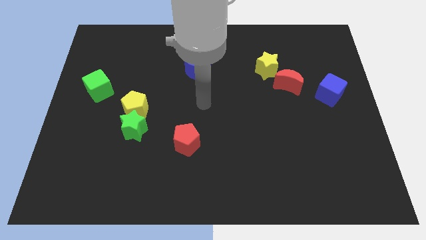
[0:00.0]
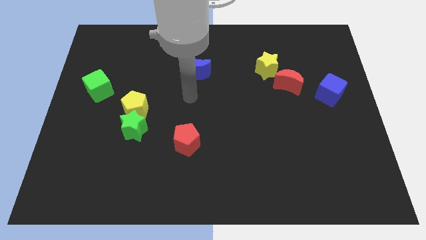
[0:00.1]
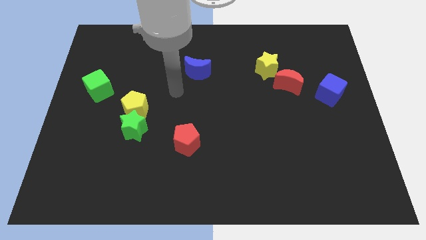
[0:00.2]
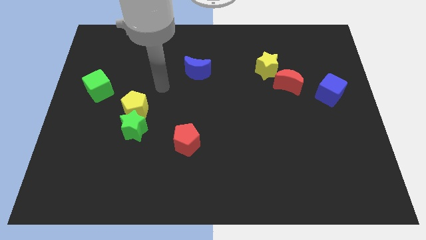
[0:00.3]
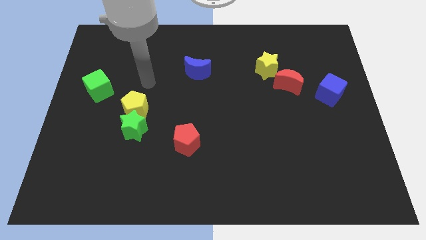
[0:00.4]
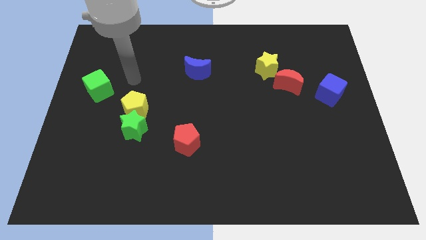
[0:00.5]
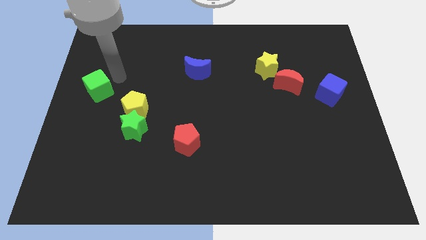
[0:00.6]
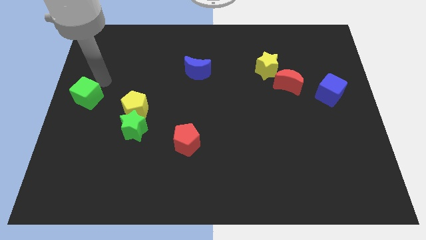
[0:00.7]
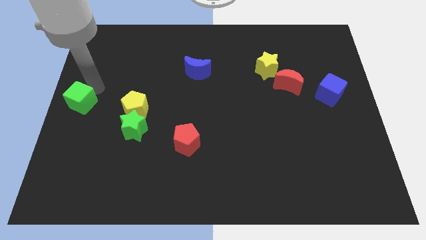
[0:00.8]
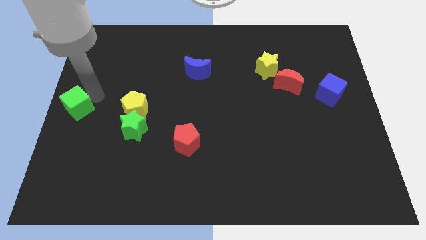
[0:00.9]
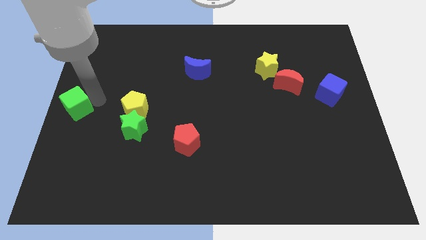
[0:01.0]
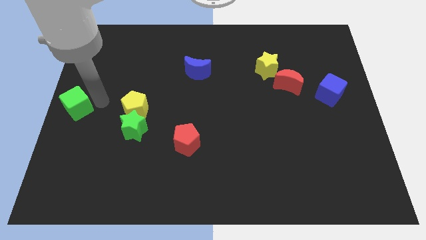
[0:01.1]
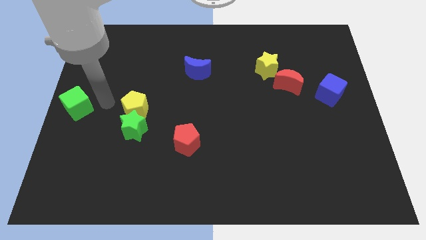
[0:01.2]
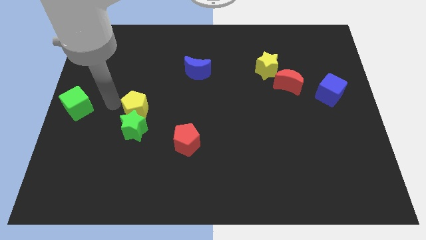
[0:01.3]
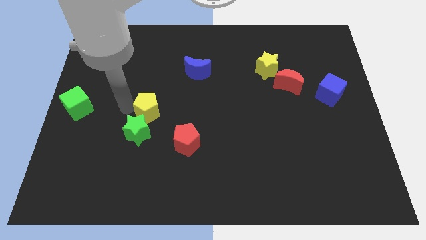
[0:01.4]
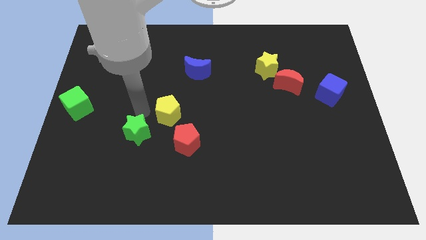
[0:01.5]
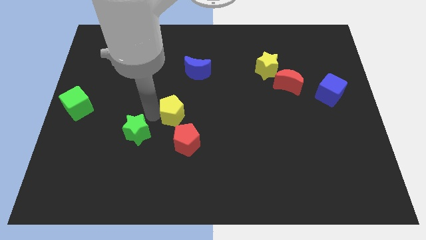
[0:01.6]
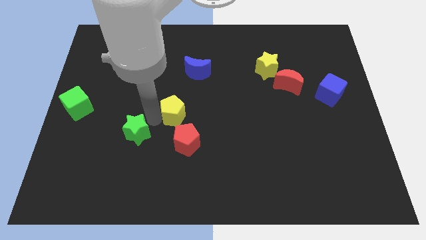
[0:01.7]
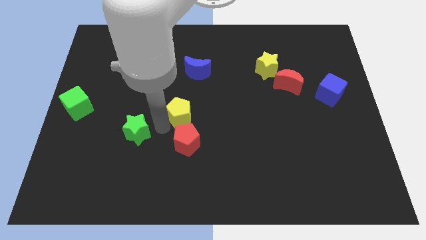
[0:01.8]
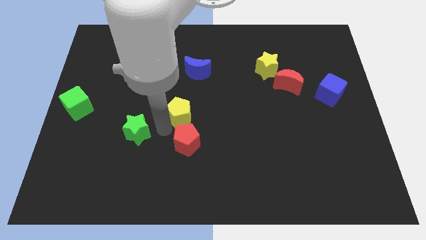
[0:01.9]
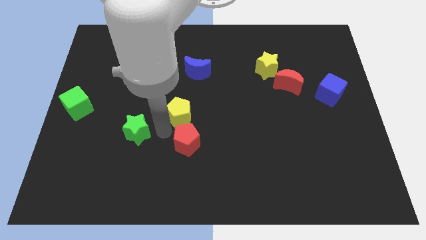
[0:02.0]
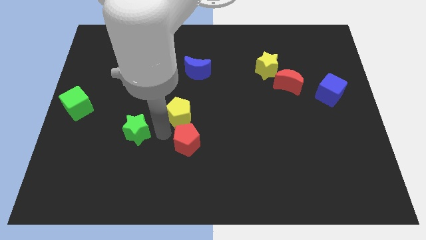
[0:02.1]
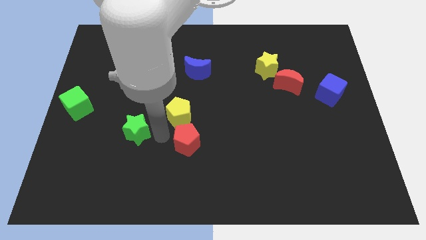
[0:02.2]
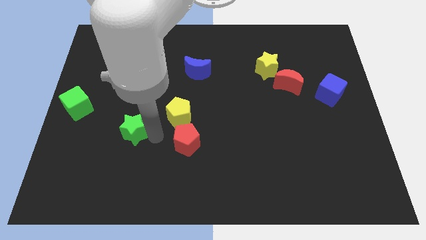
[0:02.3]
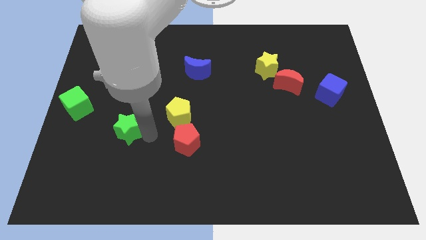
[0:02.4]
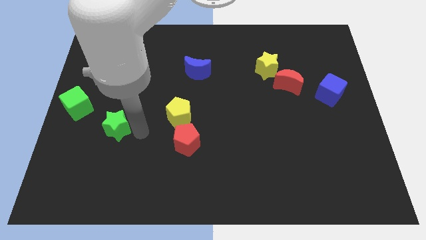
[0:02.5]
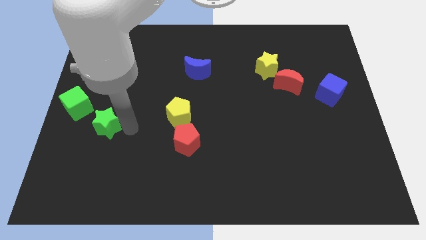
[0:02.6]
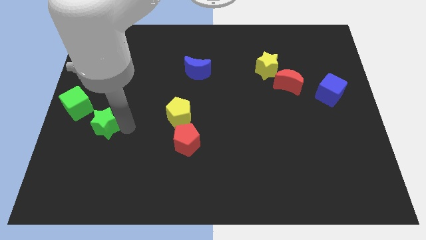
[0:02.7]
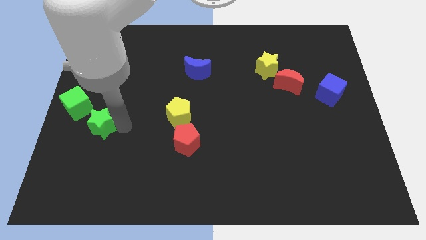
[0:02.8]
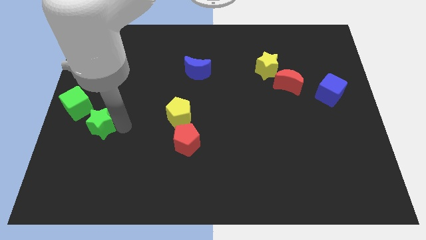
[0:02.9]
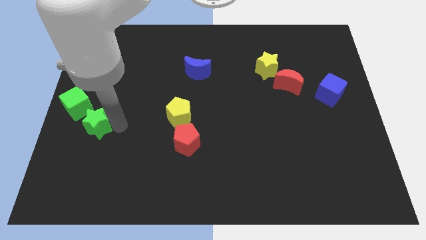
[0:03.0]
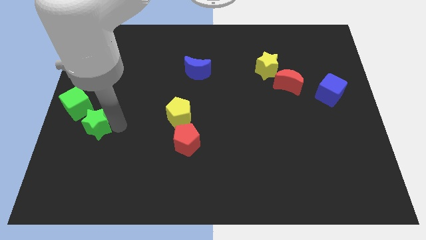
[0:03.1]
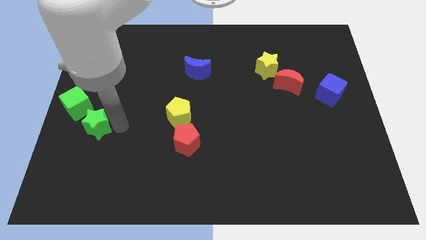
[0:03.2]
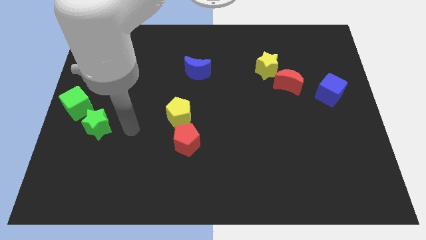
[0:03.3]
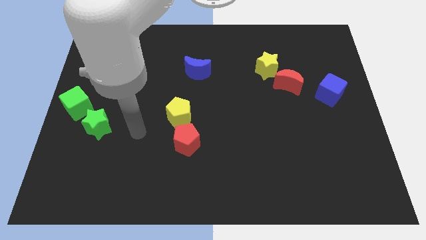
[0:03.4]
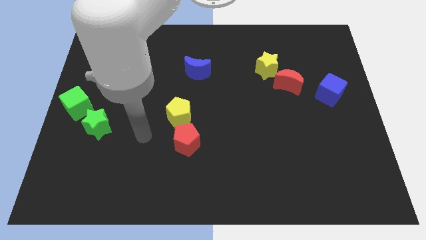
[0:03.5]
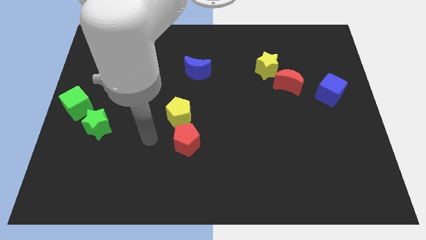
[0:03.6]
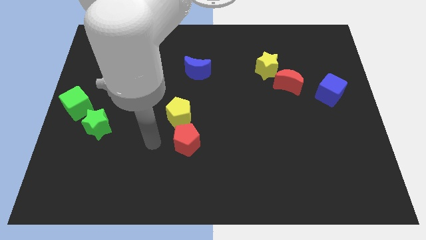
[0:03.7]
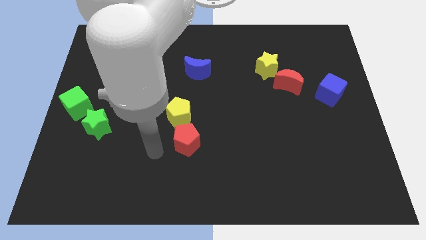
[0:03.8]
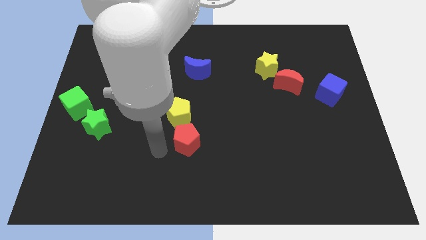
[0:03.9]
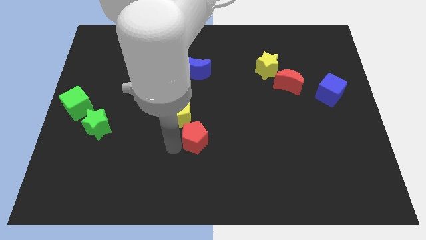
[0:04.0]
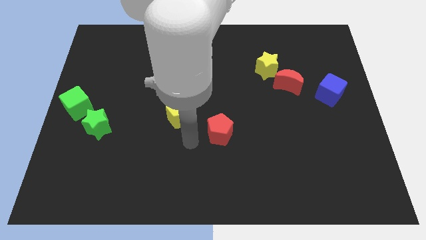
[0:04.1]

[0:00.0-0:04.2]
place the green star to the bottom right of the green cube

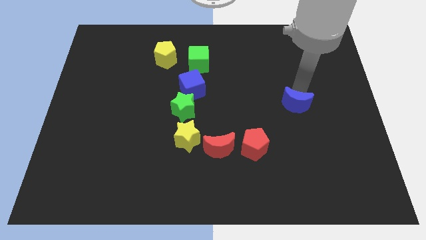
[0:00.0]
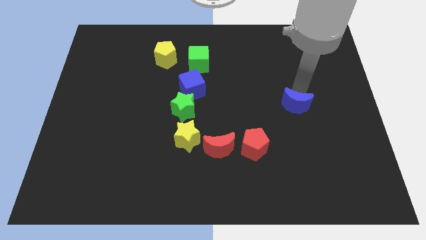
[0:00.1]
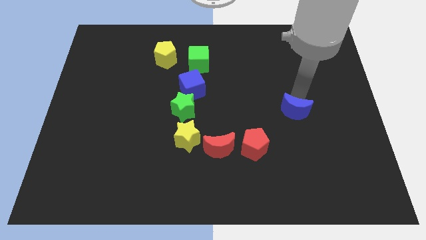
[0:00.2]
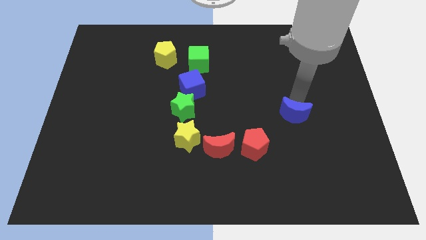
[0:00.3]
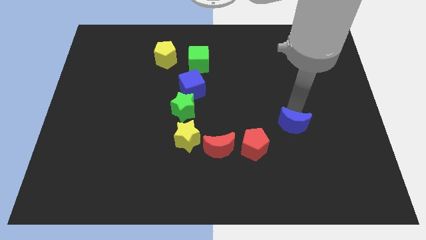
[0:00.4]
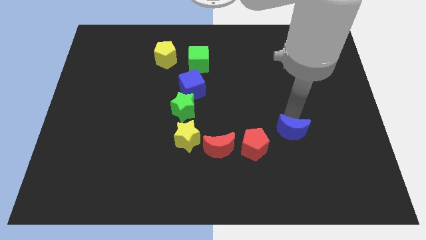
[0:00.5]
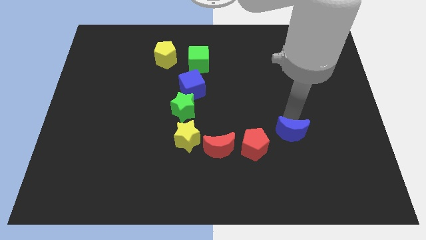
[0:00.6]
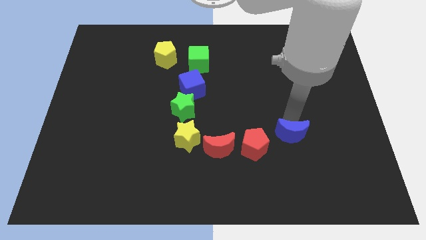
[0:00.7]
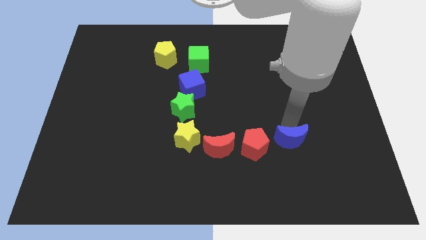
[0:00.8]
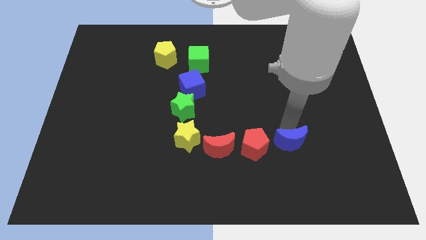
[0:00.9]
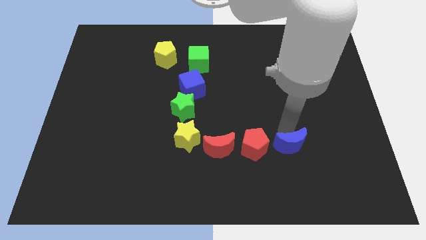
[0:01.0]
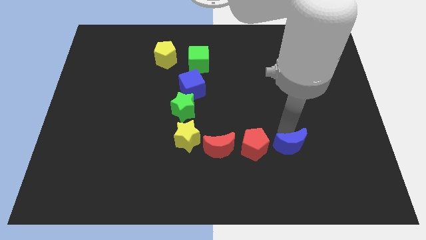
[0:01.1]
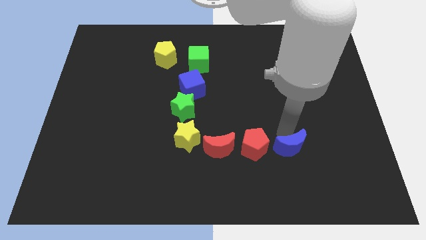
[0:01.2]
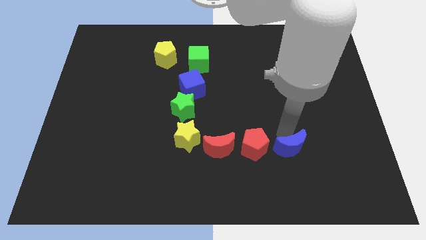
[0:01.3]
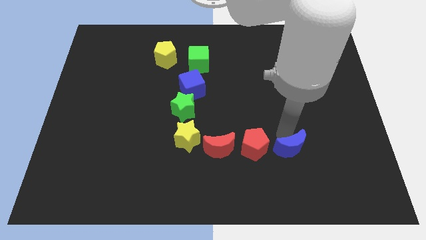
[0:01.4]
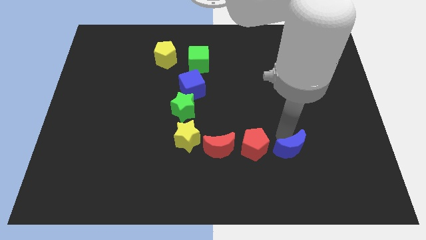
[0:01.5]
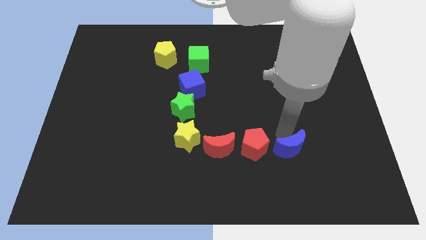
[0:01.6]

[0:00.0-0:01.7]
place the blue moon to the right of the red pentagon

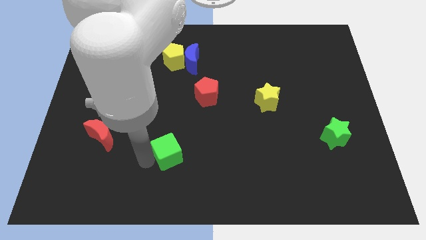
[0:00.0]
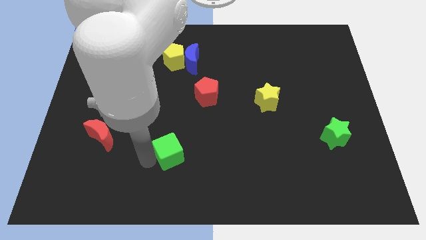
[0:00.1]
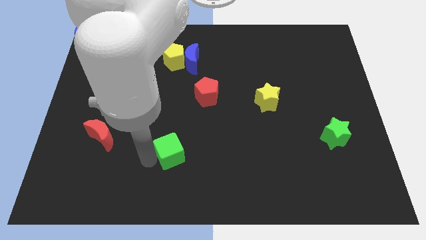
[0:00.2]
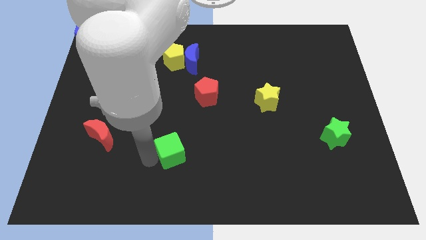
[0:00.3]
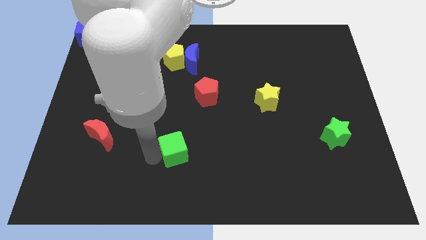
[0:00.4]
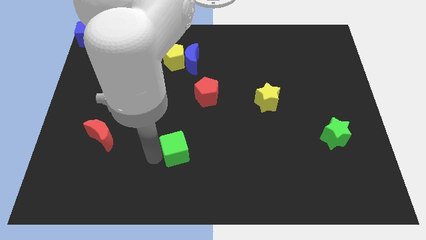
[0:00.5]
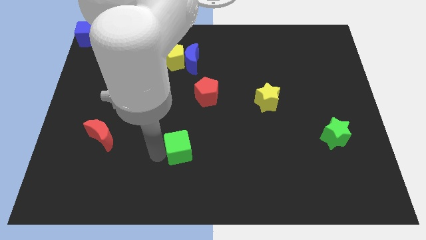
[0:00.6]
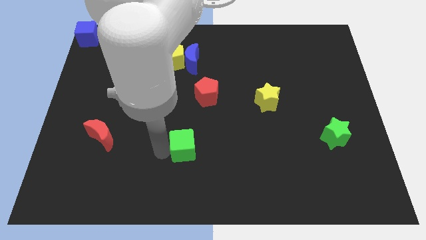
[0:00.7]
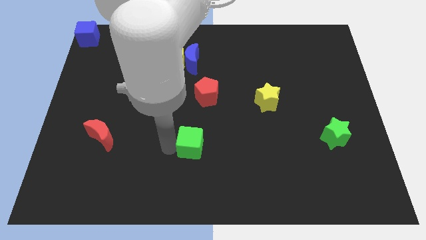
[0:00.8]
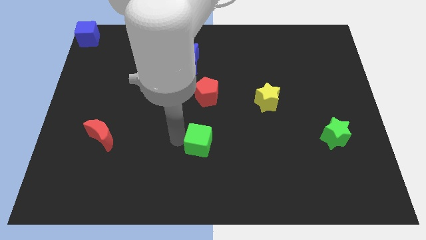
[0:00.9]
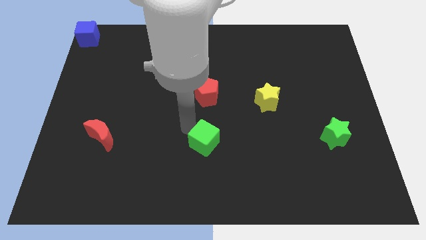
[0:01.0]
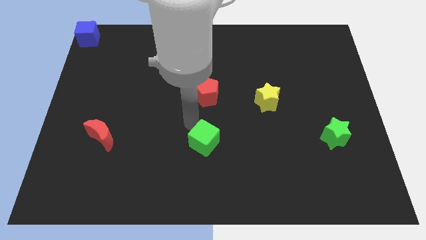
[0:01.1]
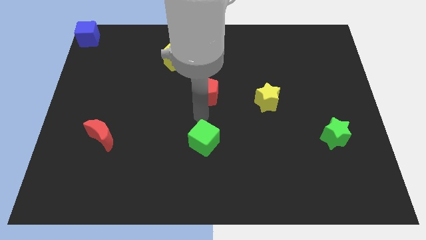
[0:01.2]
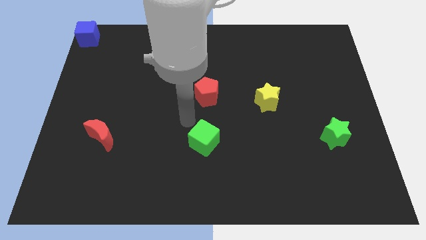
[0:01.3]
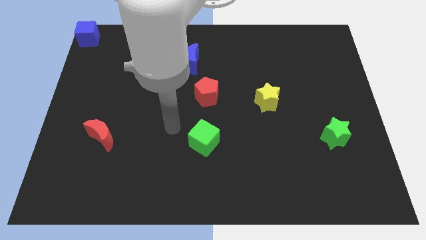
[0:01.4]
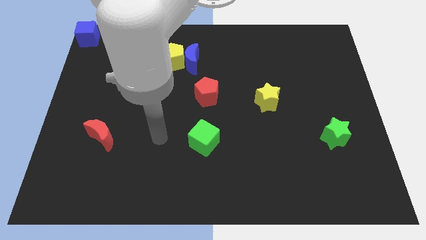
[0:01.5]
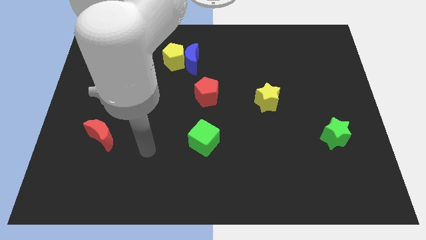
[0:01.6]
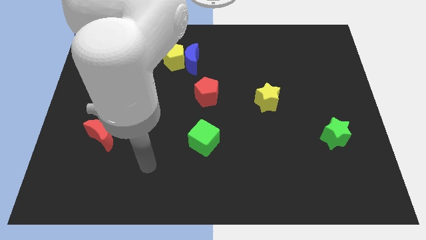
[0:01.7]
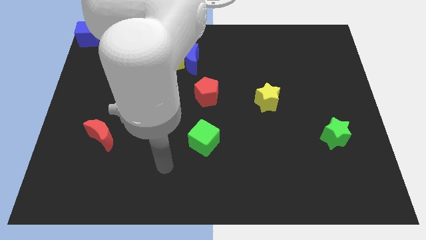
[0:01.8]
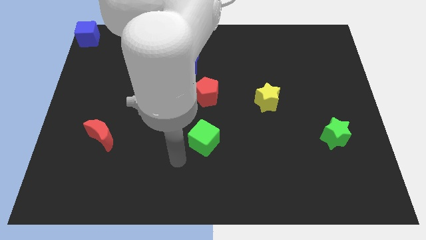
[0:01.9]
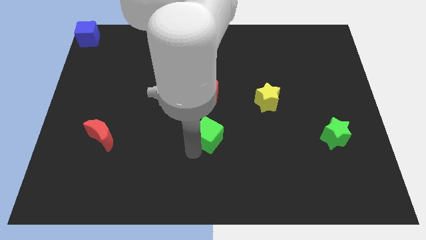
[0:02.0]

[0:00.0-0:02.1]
place the green cube parallel to green star

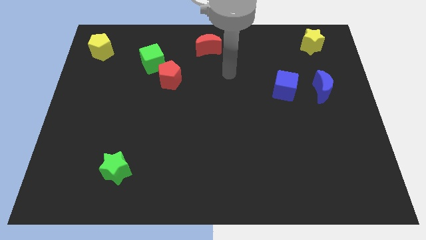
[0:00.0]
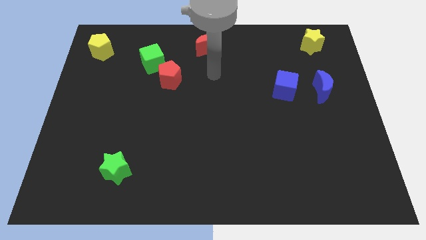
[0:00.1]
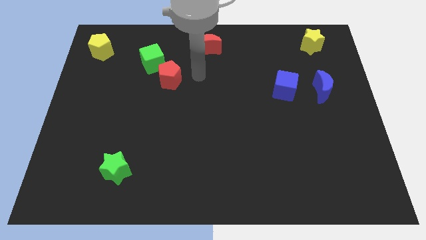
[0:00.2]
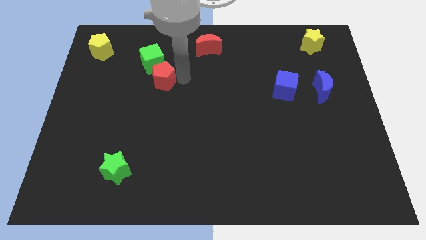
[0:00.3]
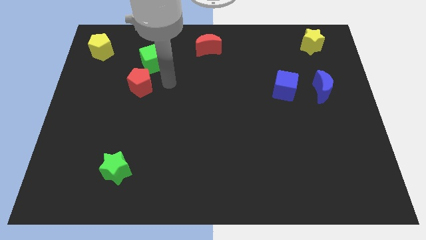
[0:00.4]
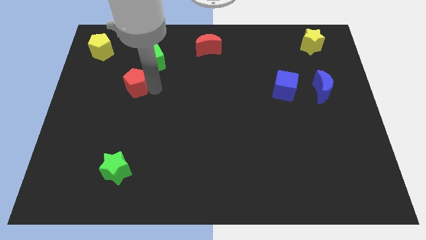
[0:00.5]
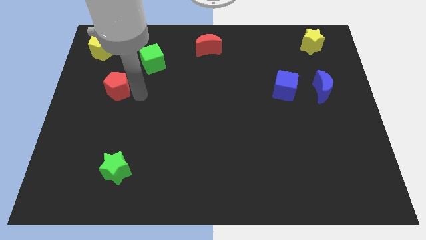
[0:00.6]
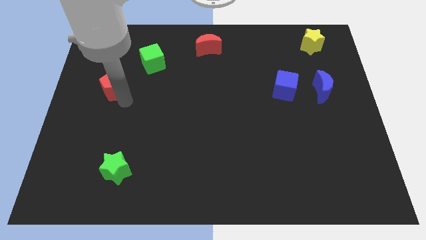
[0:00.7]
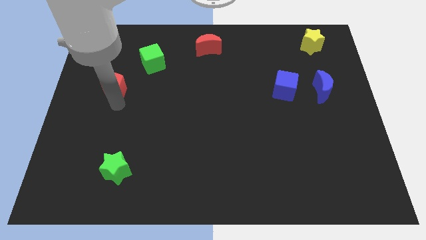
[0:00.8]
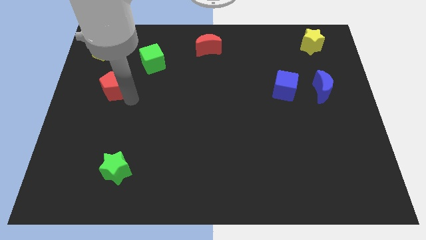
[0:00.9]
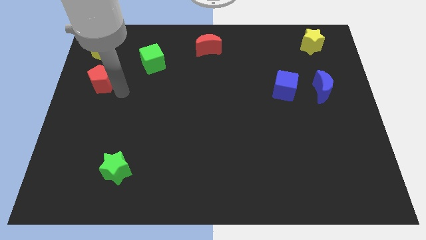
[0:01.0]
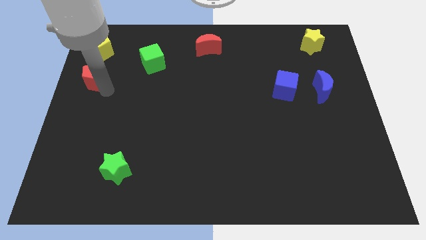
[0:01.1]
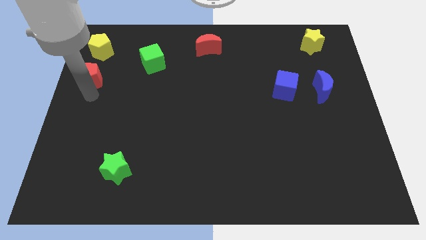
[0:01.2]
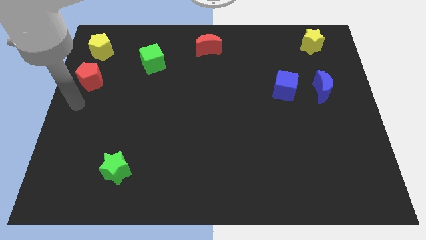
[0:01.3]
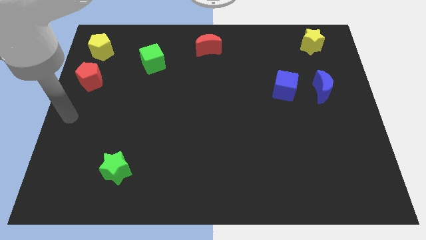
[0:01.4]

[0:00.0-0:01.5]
move the red pentagon towards the bottom of the yellow pentagon
